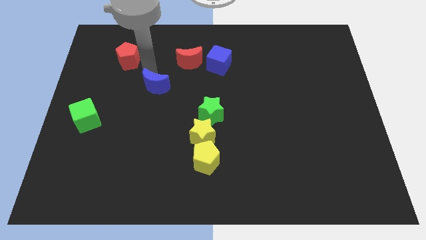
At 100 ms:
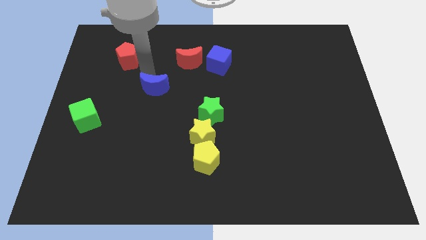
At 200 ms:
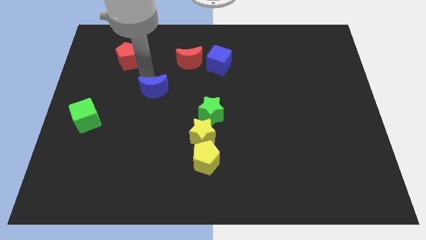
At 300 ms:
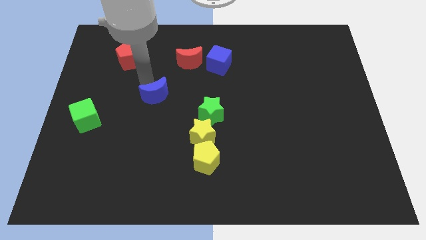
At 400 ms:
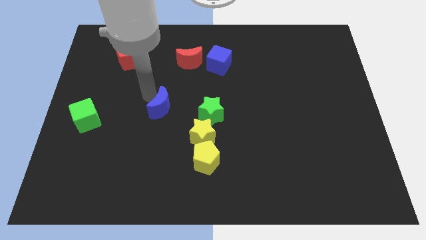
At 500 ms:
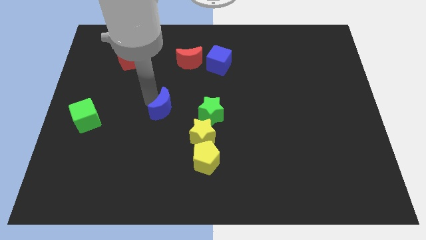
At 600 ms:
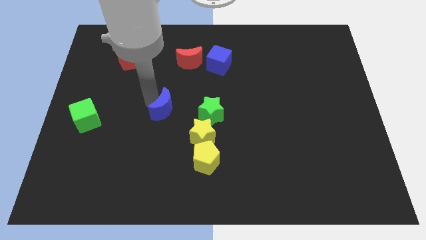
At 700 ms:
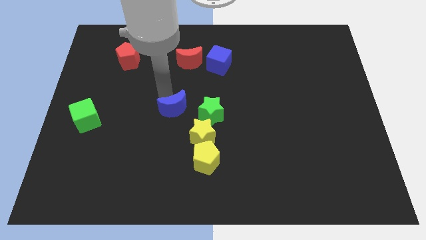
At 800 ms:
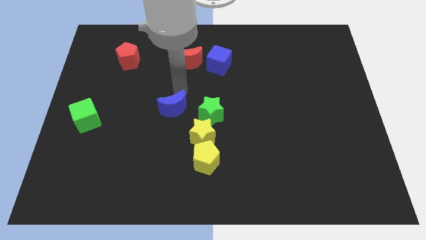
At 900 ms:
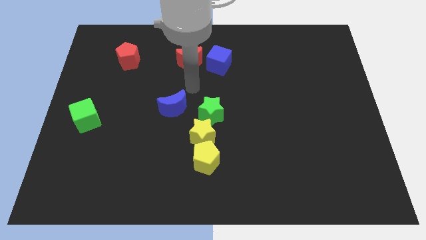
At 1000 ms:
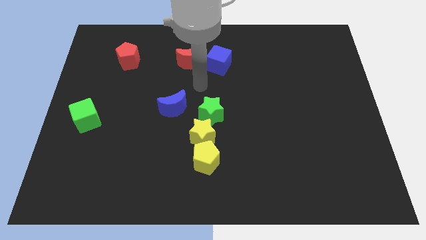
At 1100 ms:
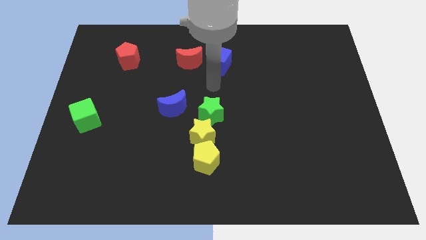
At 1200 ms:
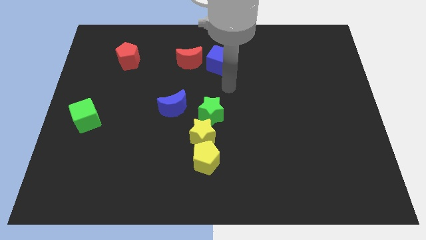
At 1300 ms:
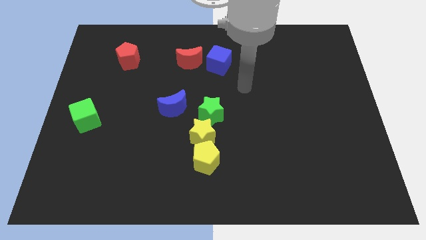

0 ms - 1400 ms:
place the blue crescent to the left side of the green star

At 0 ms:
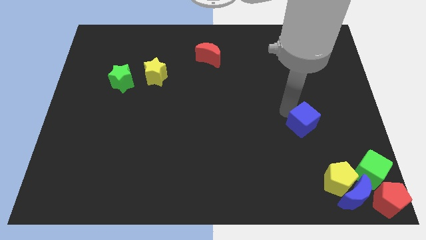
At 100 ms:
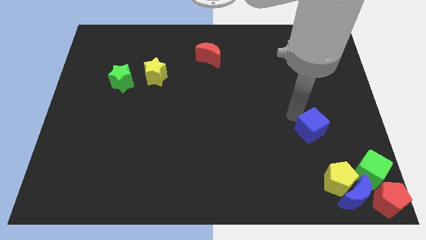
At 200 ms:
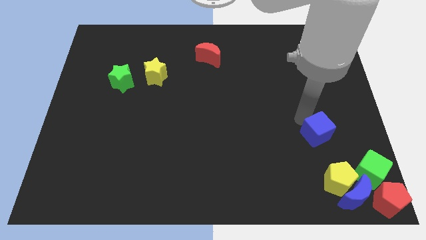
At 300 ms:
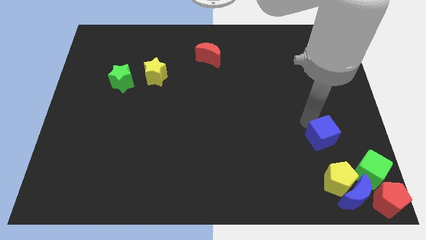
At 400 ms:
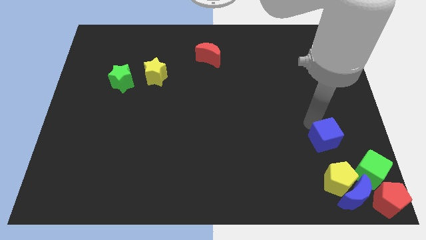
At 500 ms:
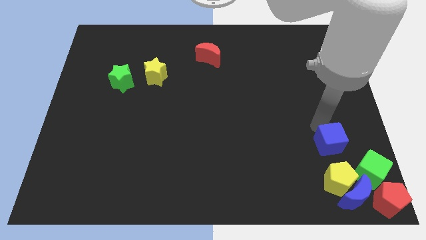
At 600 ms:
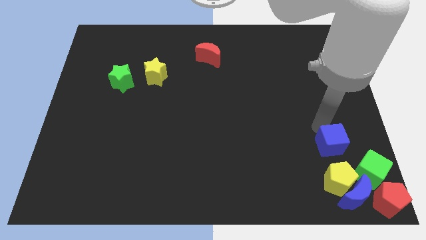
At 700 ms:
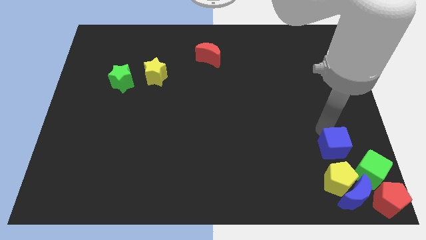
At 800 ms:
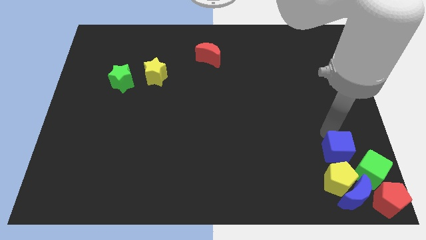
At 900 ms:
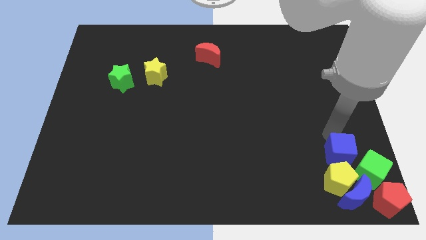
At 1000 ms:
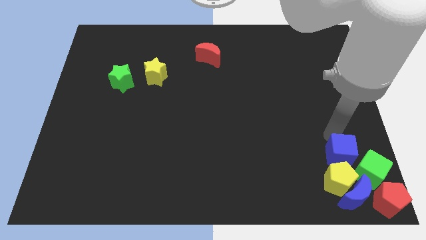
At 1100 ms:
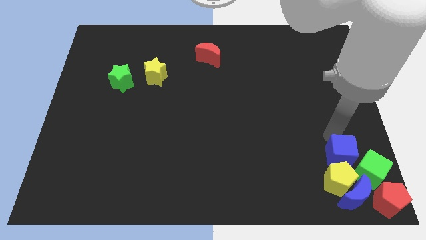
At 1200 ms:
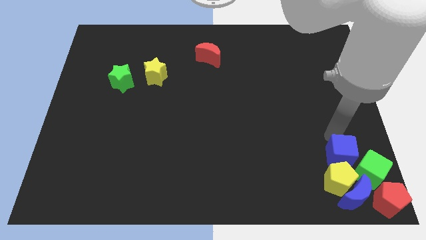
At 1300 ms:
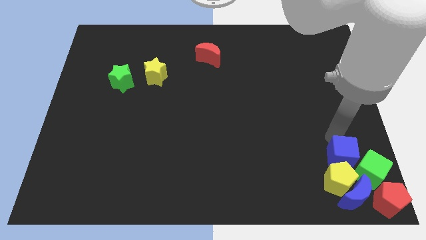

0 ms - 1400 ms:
move the blue cube to the top of the yellow pentagon

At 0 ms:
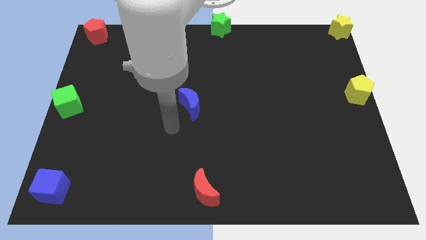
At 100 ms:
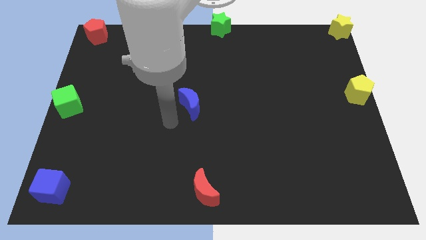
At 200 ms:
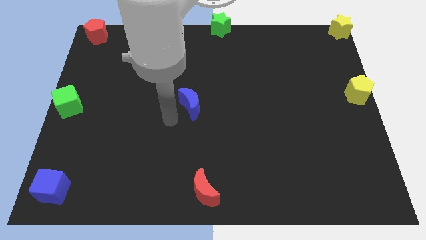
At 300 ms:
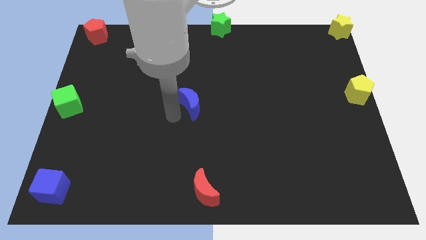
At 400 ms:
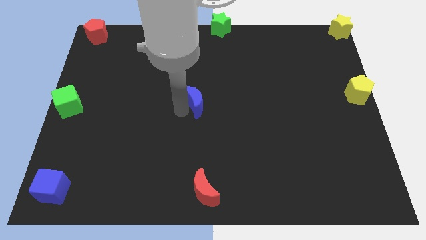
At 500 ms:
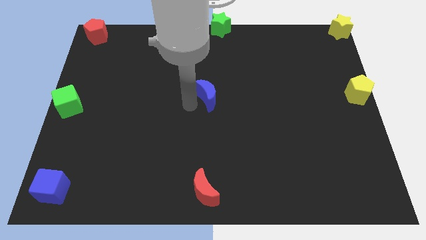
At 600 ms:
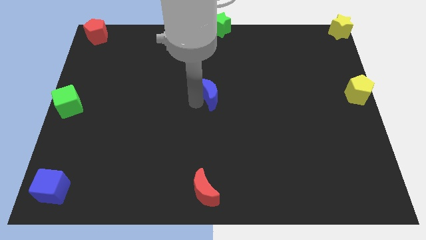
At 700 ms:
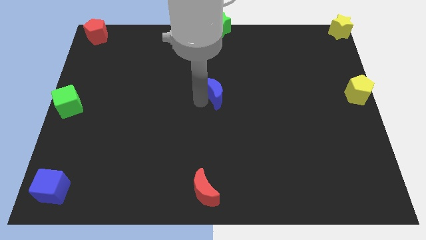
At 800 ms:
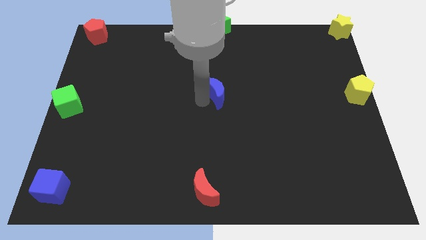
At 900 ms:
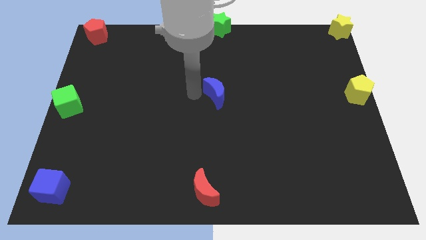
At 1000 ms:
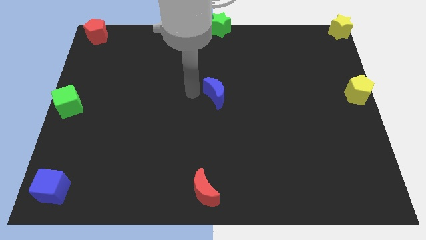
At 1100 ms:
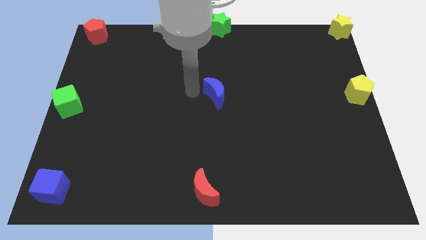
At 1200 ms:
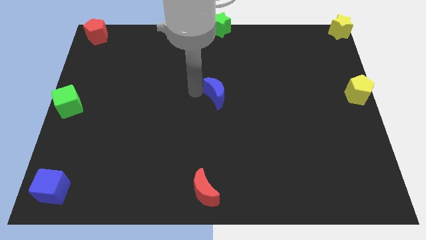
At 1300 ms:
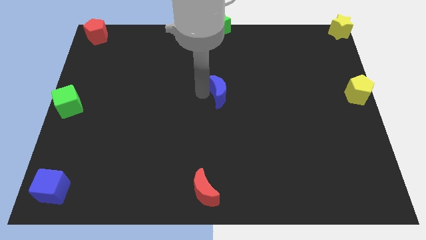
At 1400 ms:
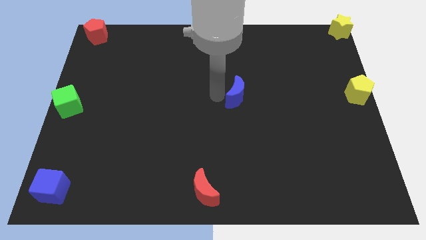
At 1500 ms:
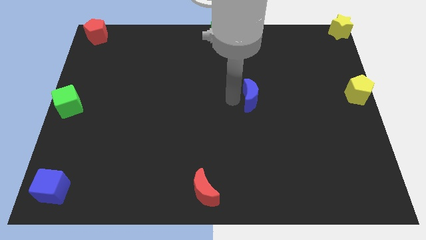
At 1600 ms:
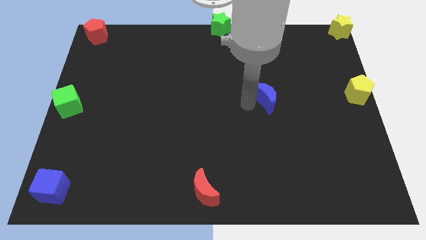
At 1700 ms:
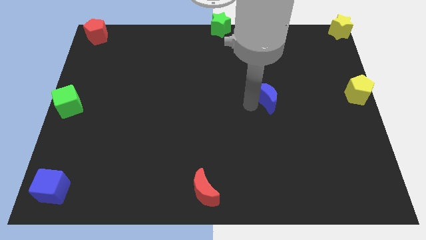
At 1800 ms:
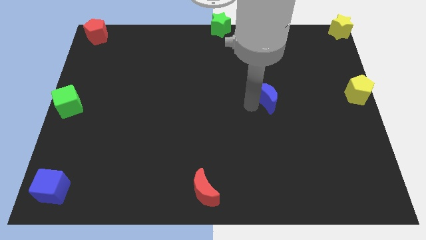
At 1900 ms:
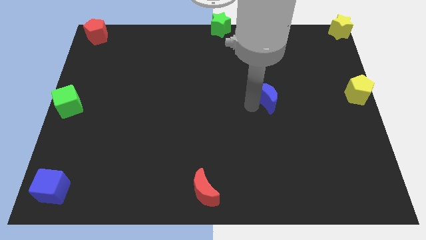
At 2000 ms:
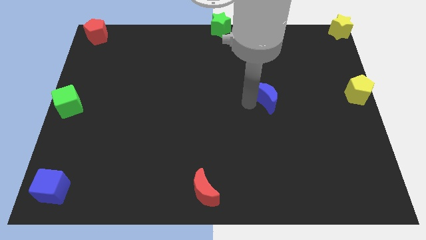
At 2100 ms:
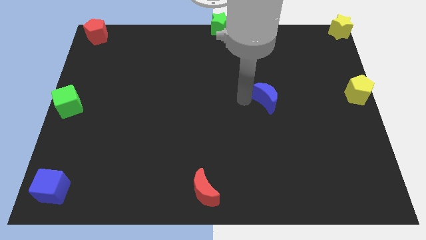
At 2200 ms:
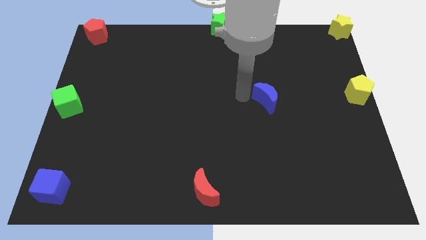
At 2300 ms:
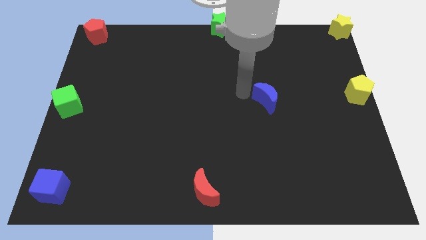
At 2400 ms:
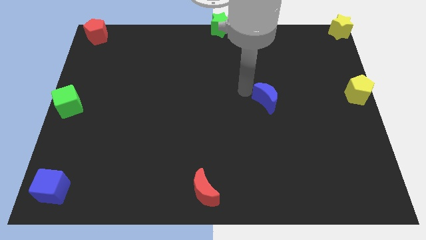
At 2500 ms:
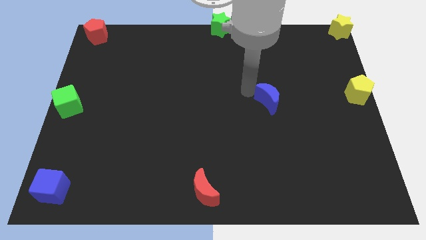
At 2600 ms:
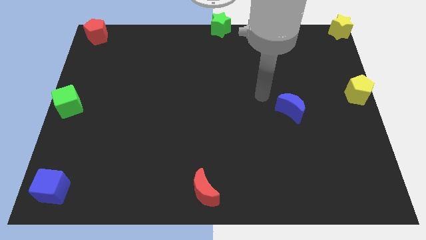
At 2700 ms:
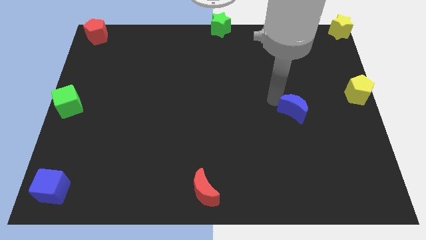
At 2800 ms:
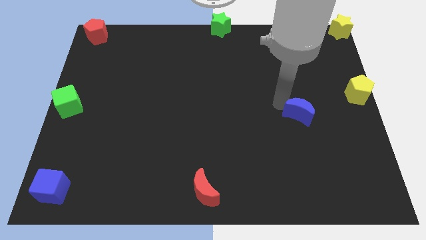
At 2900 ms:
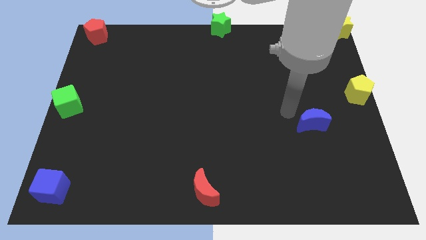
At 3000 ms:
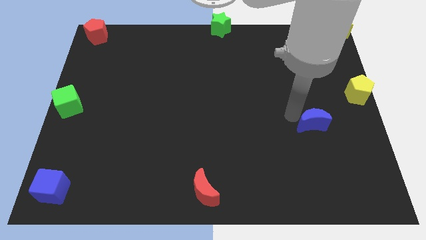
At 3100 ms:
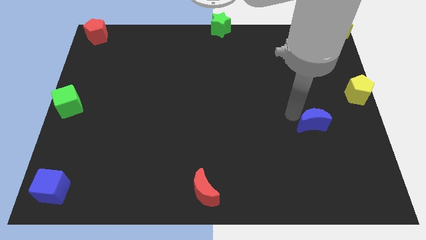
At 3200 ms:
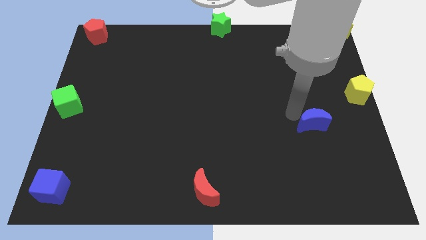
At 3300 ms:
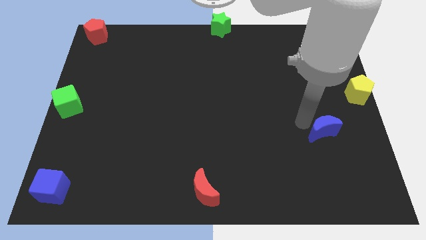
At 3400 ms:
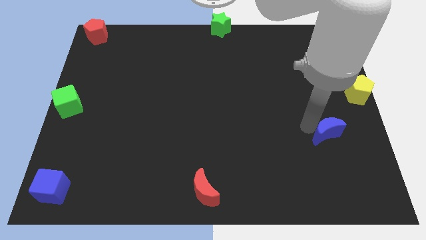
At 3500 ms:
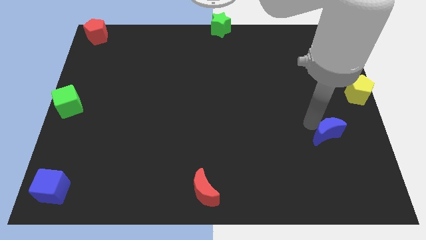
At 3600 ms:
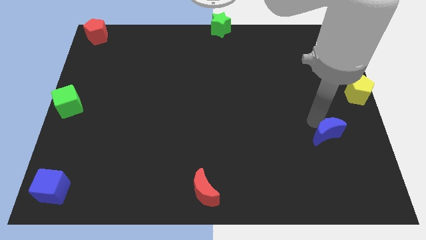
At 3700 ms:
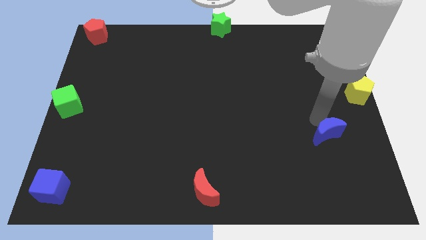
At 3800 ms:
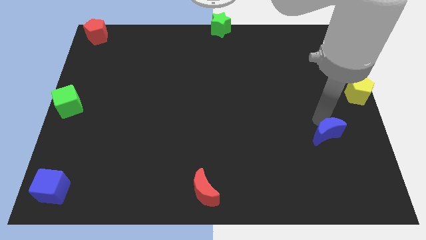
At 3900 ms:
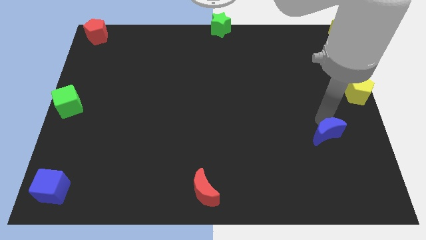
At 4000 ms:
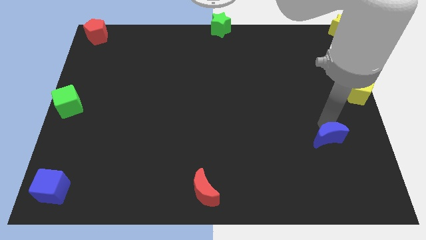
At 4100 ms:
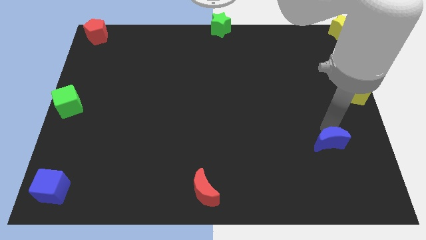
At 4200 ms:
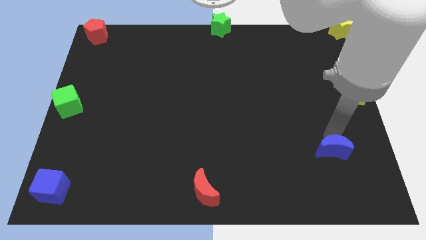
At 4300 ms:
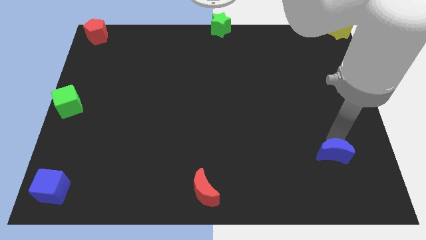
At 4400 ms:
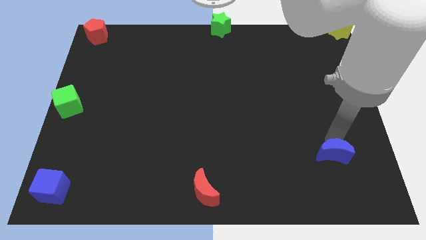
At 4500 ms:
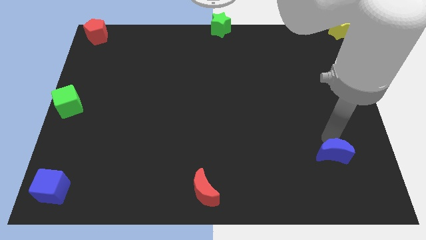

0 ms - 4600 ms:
move the blue crescent to the bottom side of the board

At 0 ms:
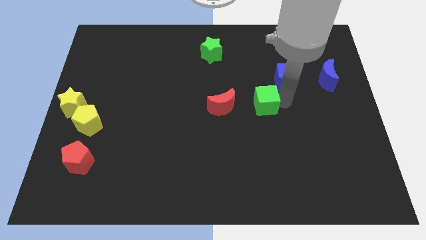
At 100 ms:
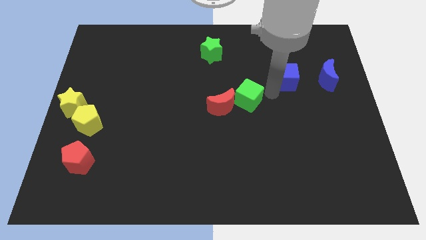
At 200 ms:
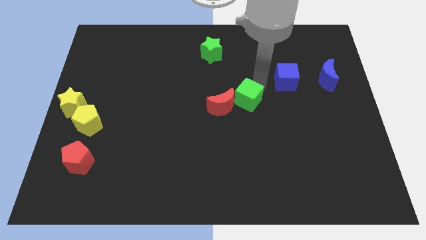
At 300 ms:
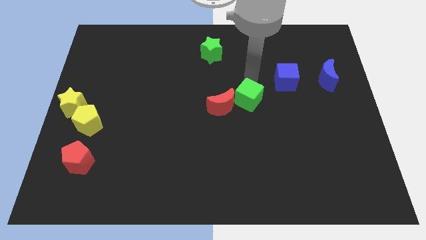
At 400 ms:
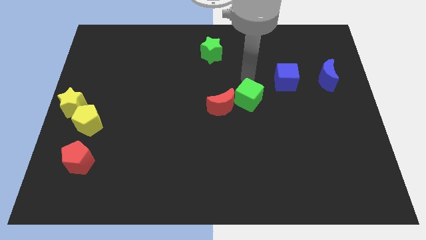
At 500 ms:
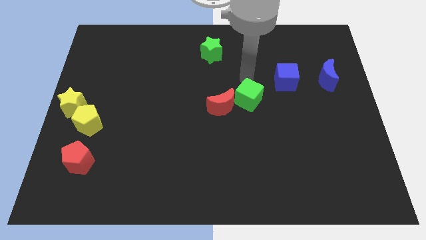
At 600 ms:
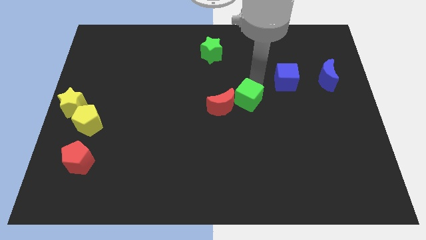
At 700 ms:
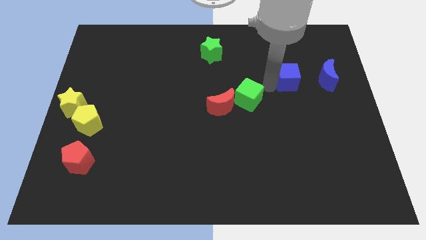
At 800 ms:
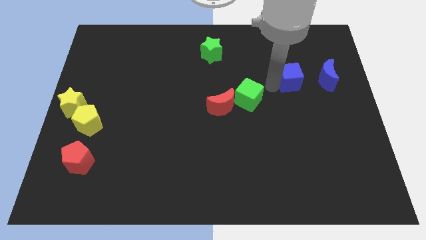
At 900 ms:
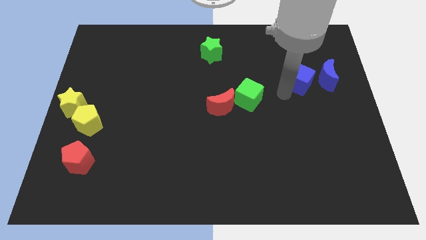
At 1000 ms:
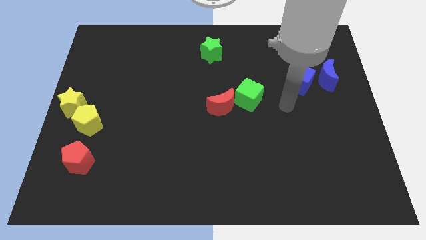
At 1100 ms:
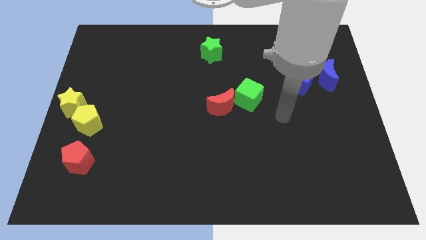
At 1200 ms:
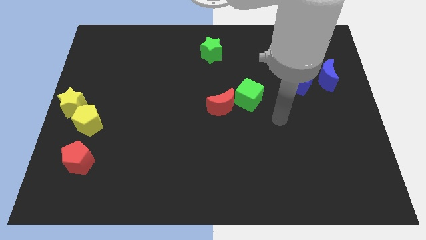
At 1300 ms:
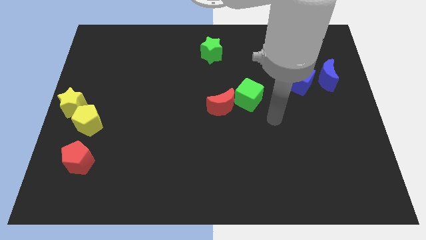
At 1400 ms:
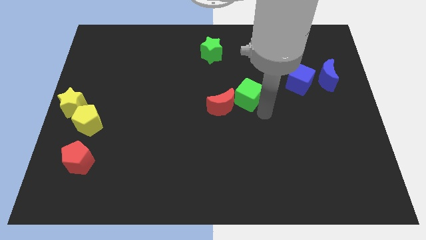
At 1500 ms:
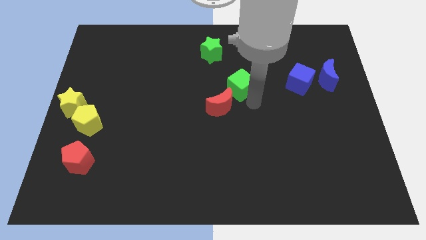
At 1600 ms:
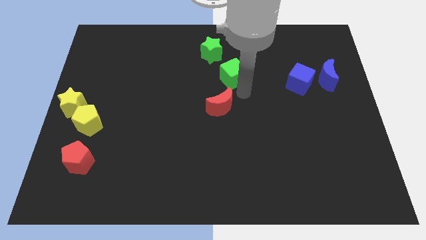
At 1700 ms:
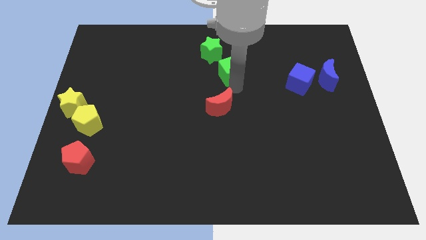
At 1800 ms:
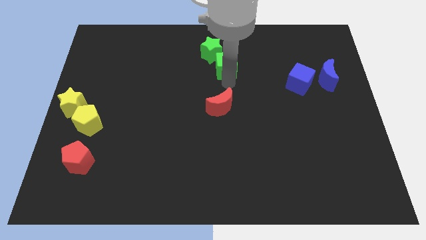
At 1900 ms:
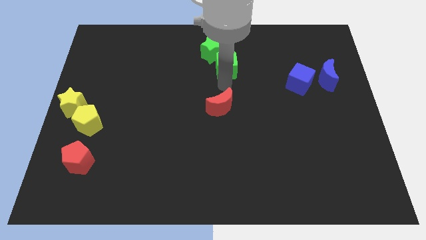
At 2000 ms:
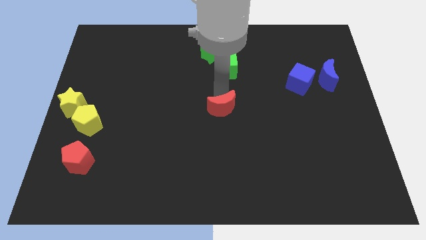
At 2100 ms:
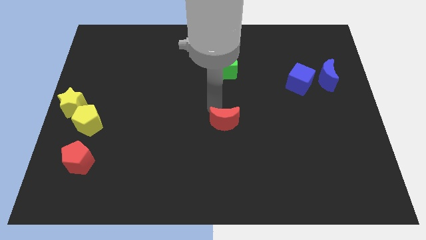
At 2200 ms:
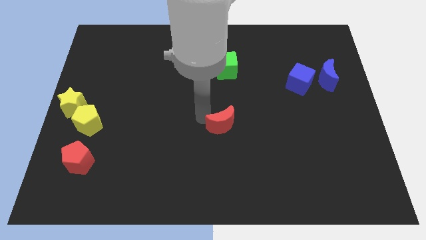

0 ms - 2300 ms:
place the green cube bottom right to the green star
